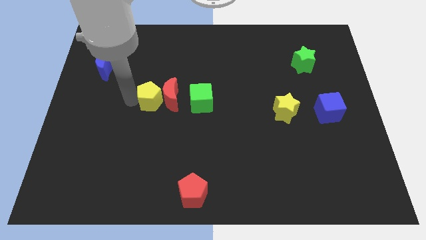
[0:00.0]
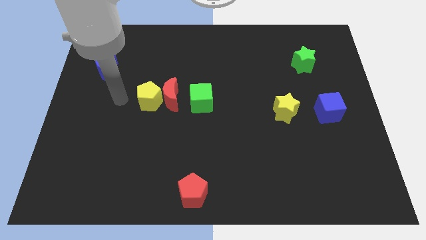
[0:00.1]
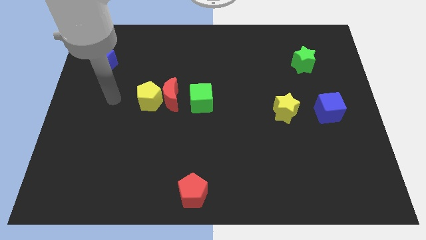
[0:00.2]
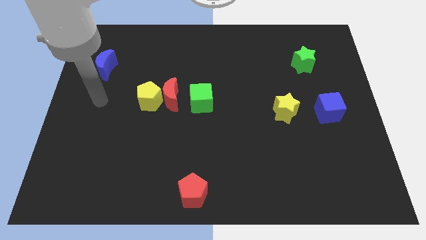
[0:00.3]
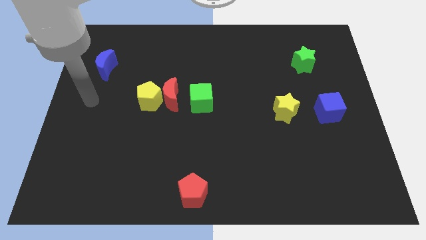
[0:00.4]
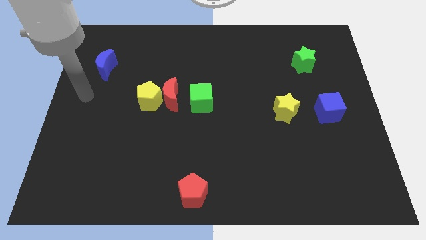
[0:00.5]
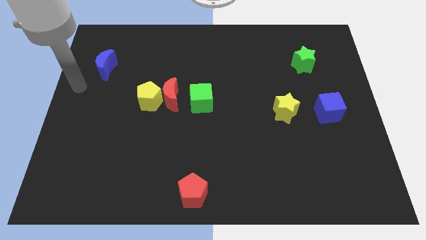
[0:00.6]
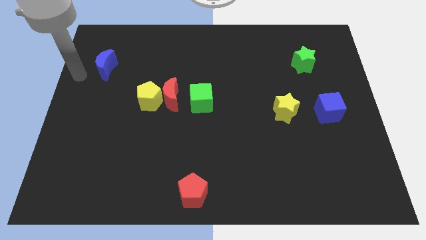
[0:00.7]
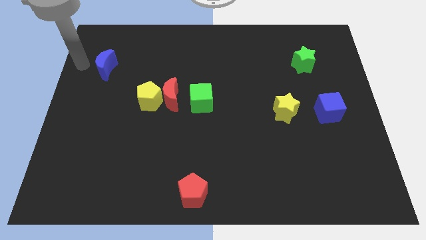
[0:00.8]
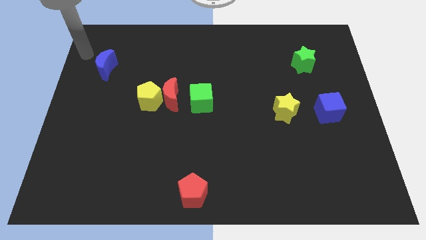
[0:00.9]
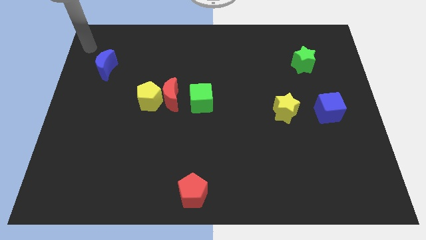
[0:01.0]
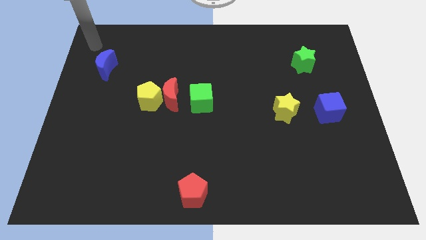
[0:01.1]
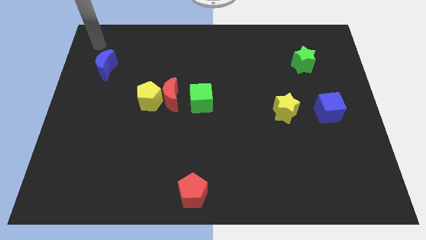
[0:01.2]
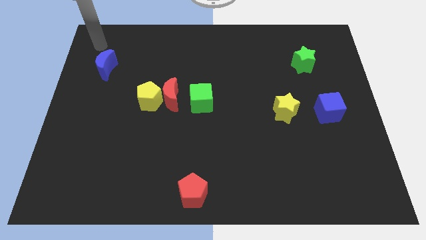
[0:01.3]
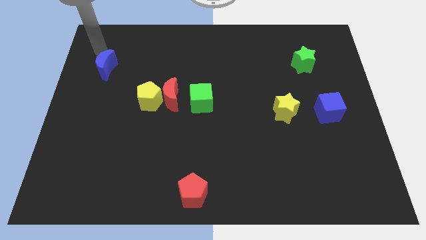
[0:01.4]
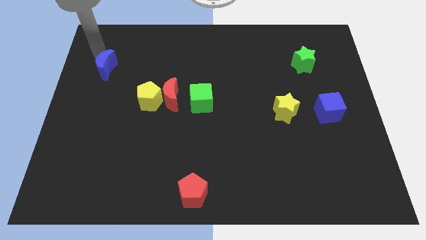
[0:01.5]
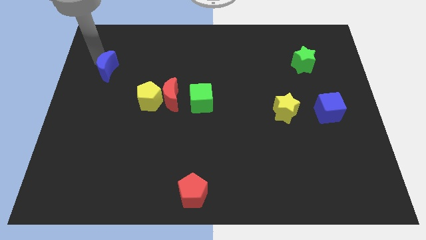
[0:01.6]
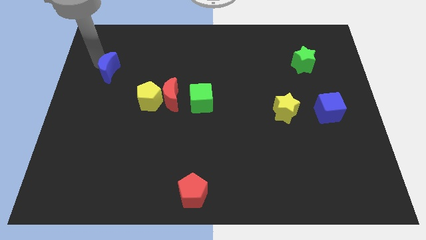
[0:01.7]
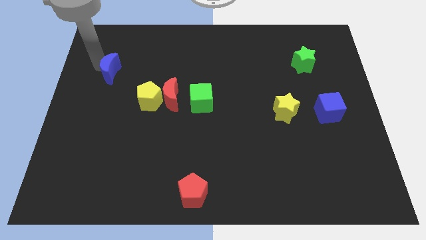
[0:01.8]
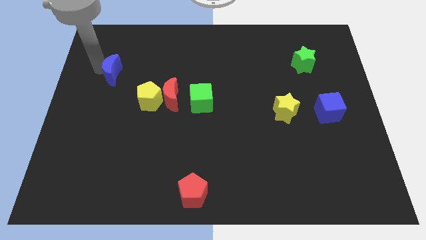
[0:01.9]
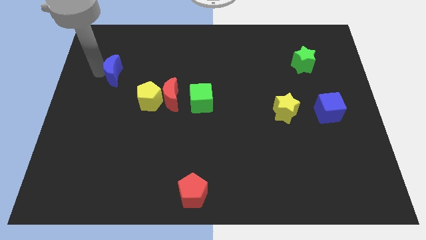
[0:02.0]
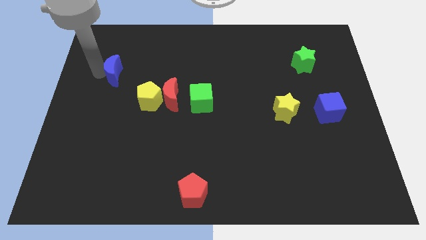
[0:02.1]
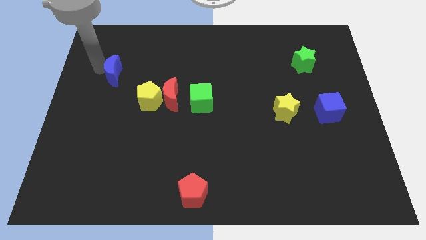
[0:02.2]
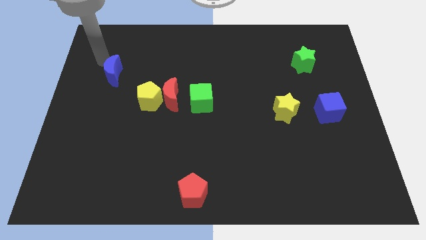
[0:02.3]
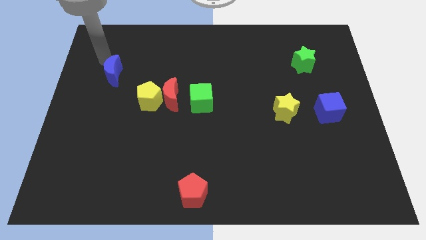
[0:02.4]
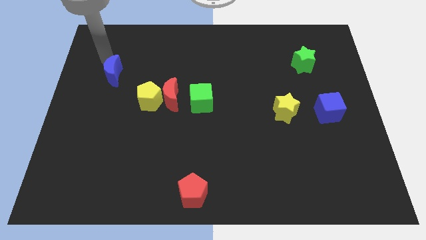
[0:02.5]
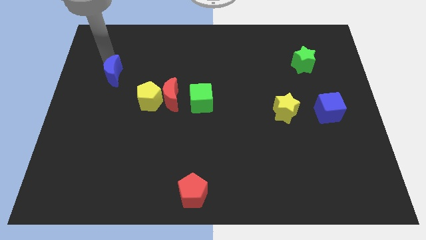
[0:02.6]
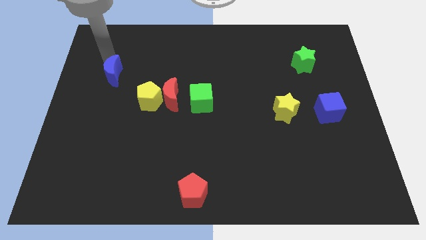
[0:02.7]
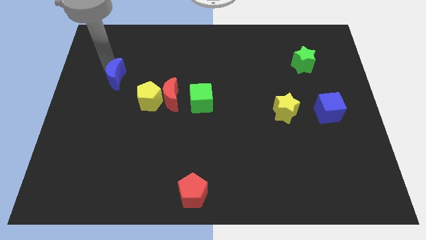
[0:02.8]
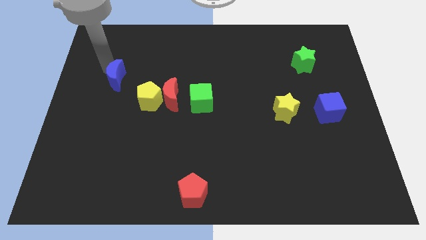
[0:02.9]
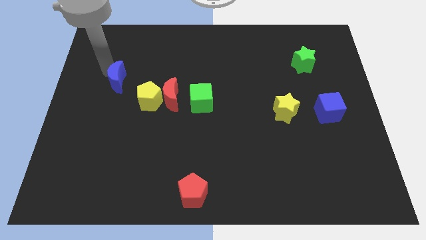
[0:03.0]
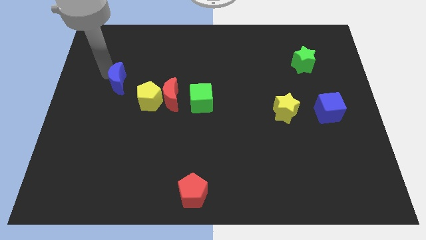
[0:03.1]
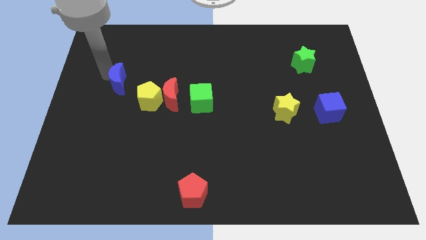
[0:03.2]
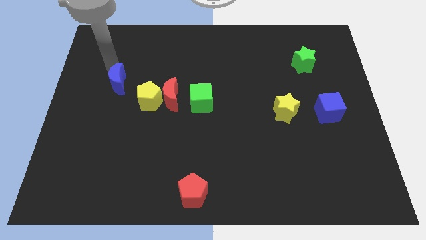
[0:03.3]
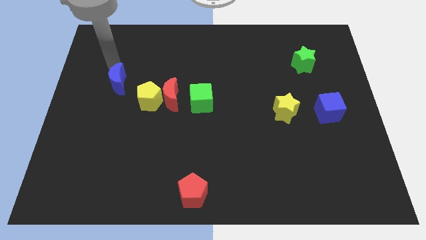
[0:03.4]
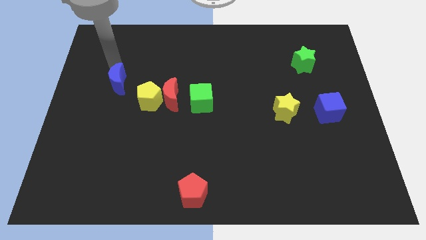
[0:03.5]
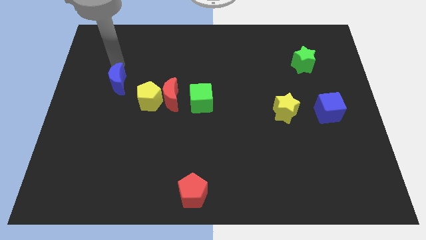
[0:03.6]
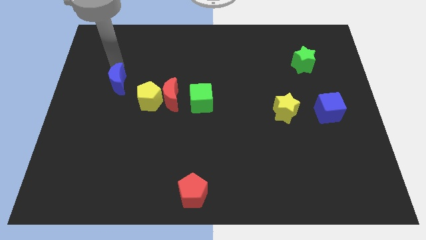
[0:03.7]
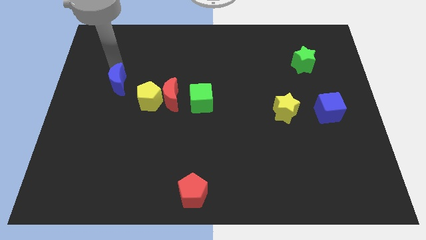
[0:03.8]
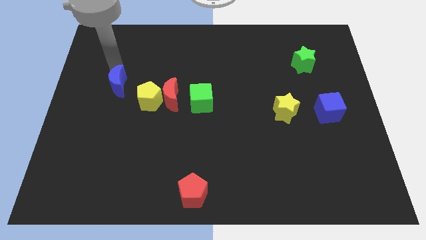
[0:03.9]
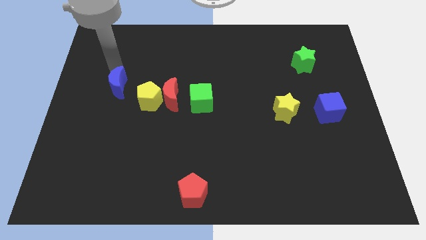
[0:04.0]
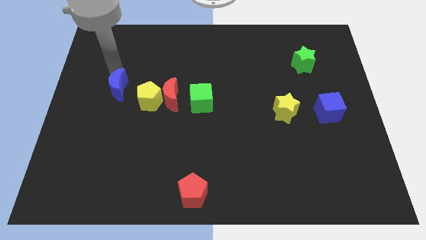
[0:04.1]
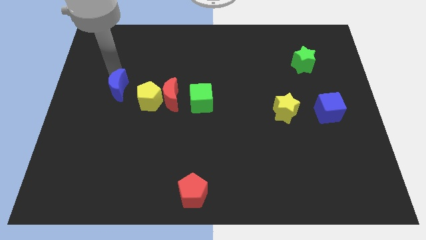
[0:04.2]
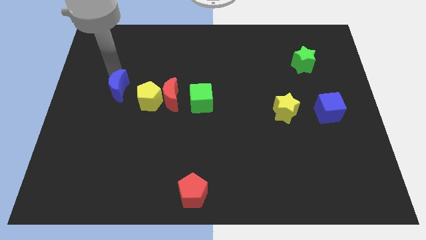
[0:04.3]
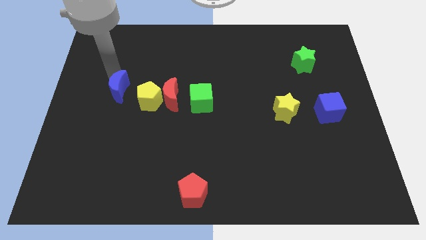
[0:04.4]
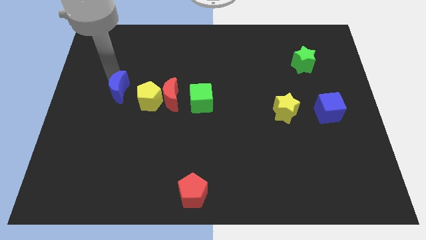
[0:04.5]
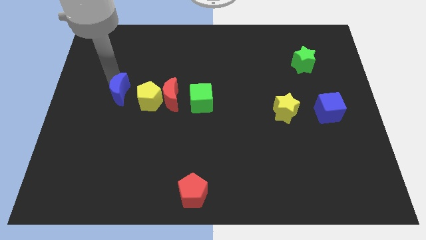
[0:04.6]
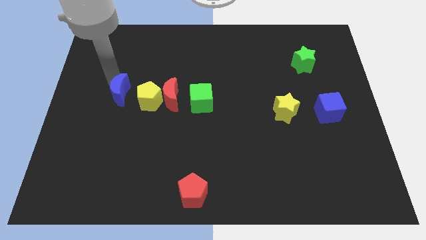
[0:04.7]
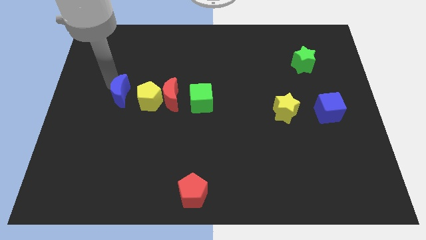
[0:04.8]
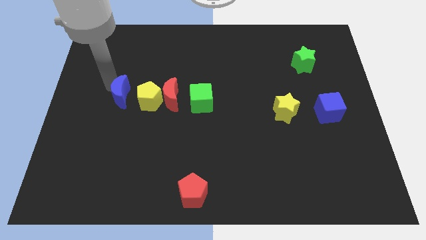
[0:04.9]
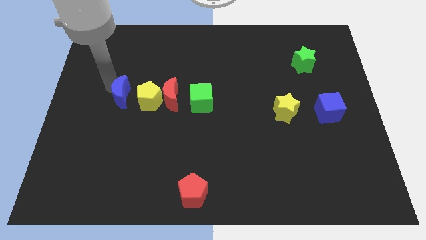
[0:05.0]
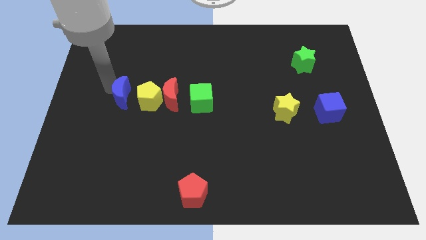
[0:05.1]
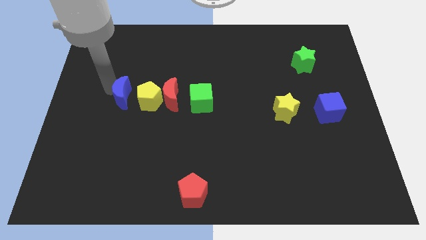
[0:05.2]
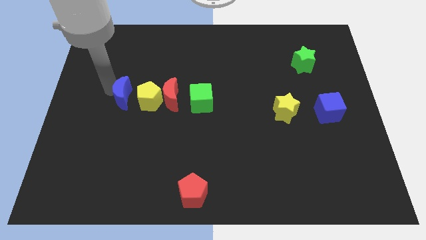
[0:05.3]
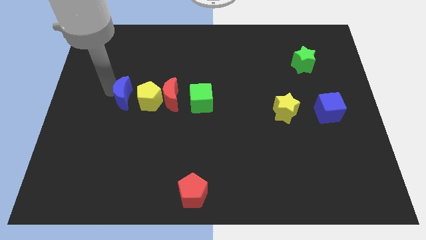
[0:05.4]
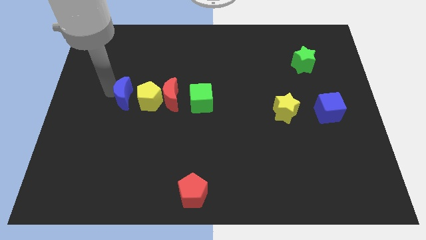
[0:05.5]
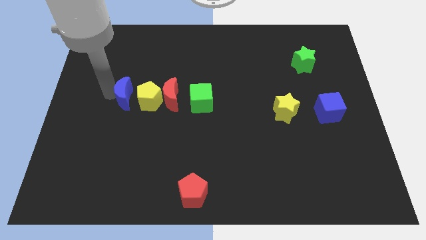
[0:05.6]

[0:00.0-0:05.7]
put the blue moon parallel to yellow pentagon

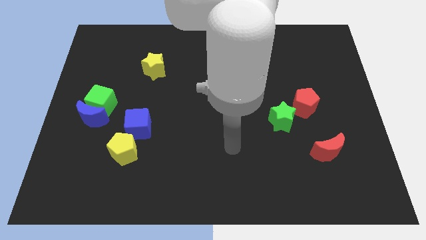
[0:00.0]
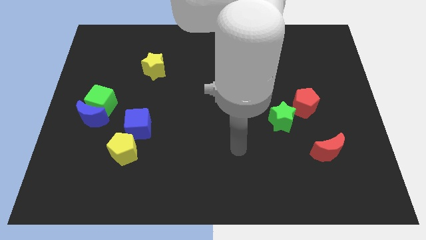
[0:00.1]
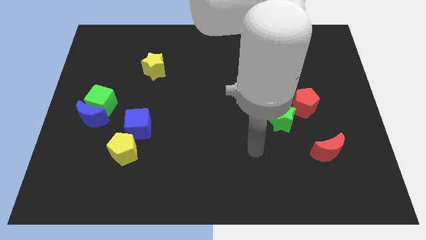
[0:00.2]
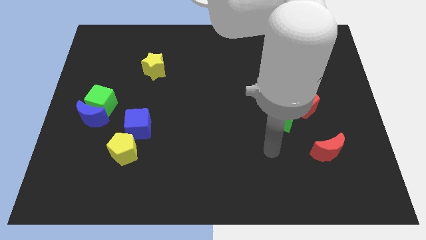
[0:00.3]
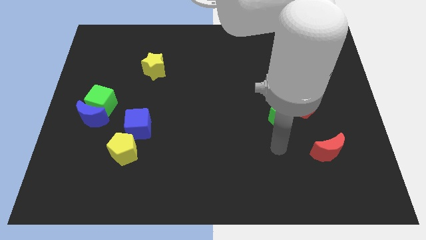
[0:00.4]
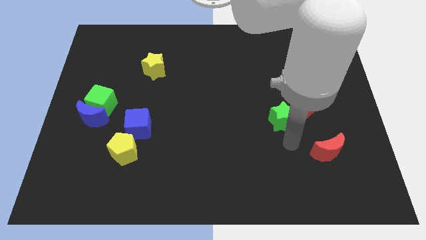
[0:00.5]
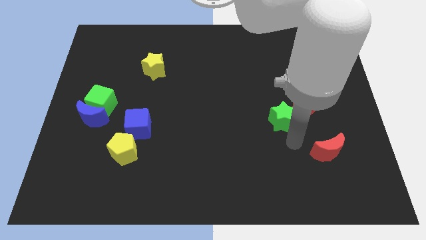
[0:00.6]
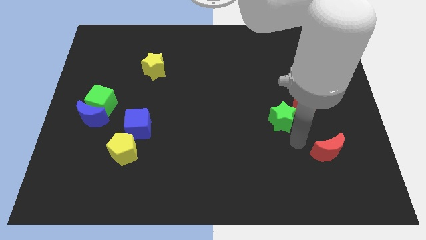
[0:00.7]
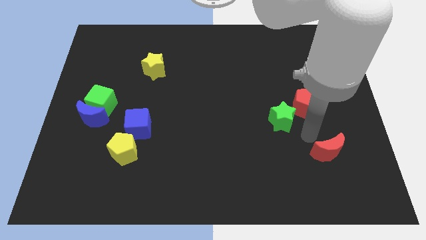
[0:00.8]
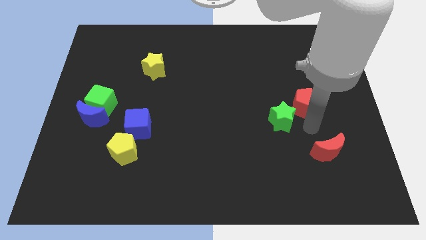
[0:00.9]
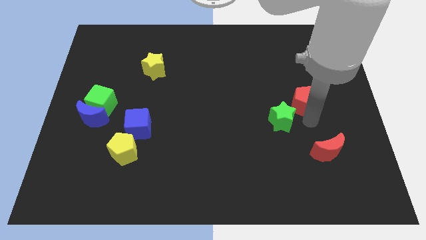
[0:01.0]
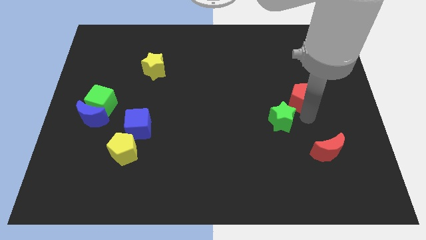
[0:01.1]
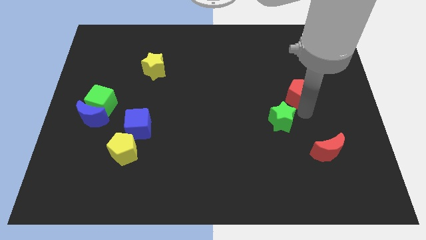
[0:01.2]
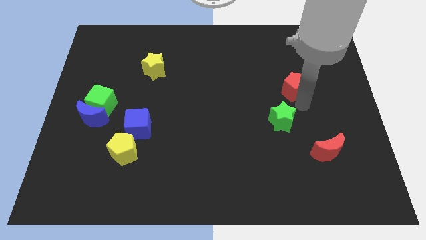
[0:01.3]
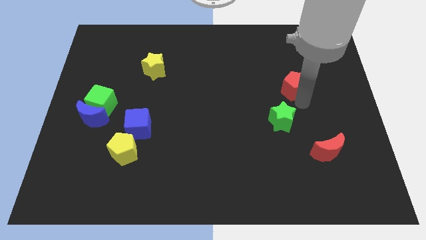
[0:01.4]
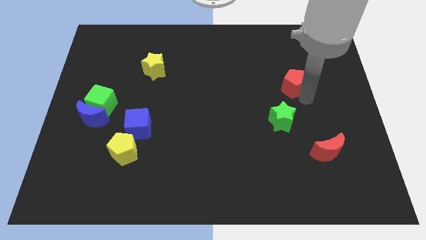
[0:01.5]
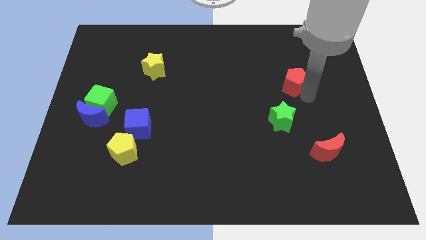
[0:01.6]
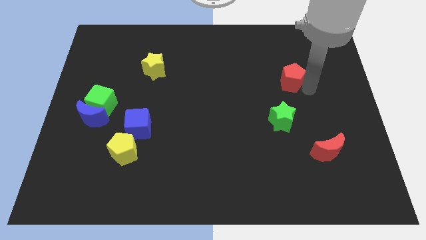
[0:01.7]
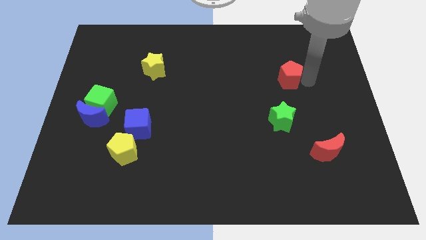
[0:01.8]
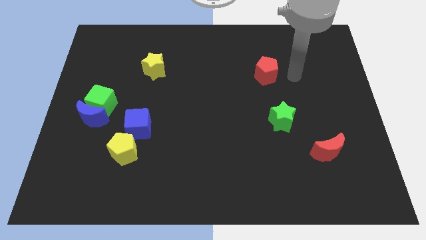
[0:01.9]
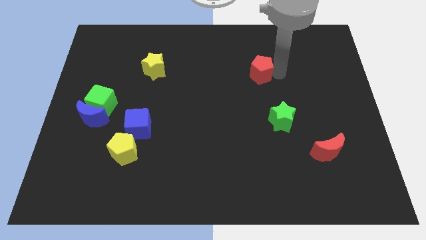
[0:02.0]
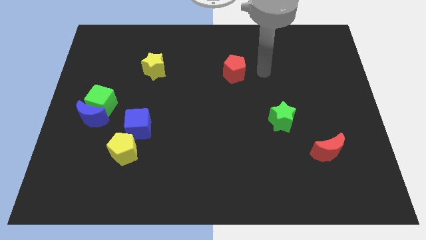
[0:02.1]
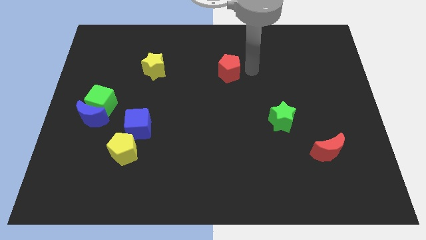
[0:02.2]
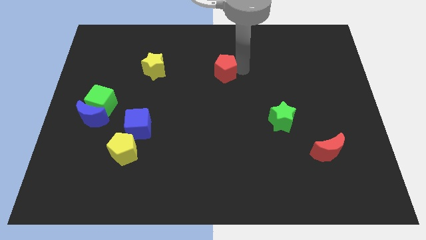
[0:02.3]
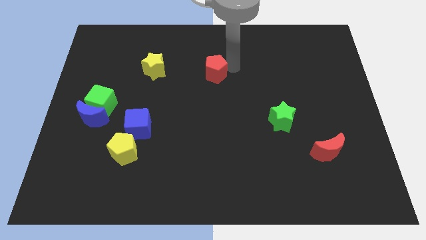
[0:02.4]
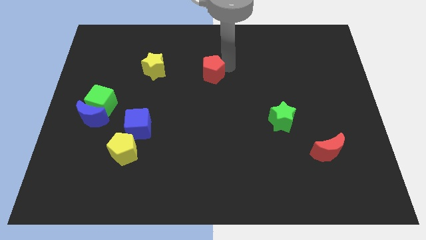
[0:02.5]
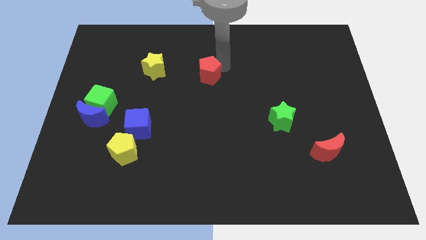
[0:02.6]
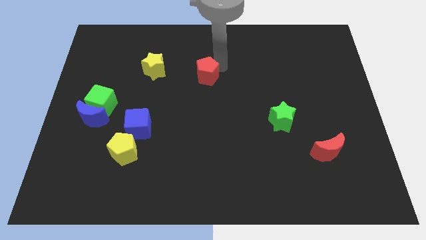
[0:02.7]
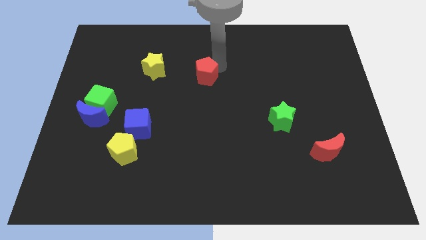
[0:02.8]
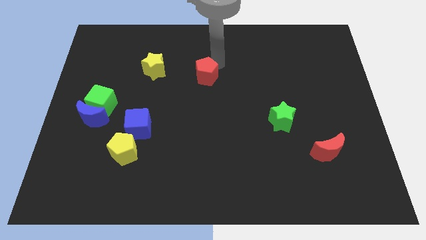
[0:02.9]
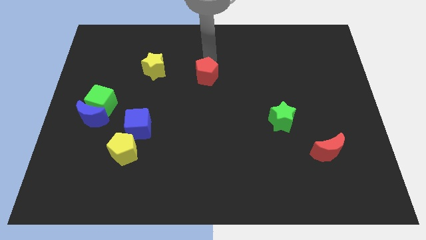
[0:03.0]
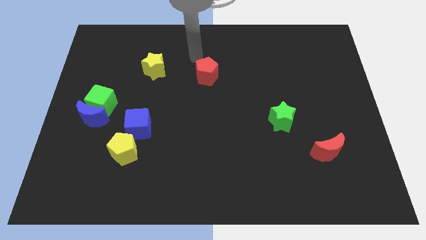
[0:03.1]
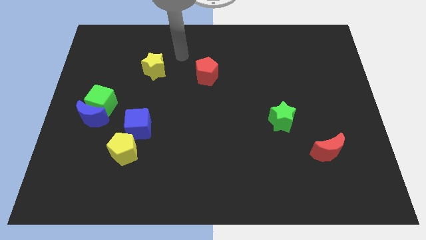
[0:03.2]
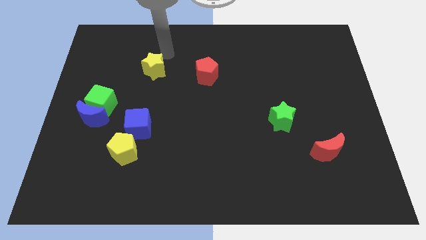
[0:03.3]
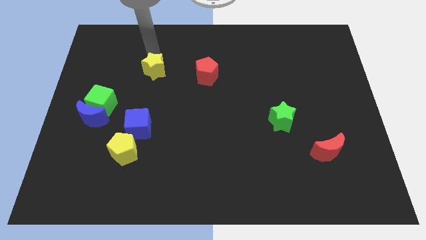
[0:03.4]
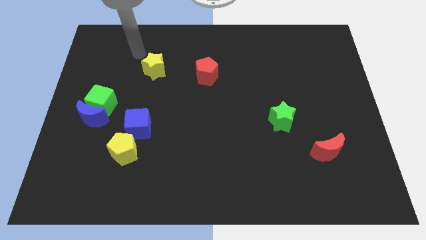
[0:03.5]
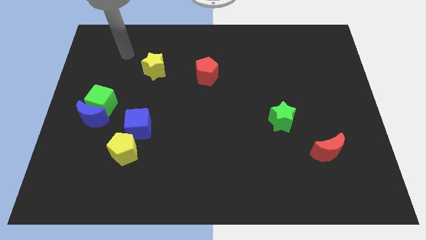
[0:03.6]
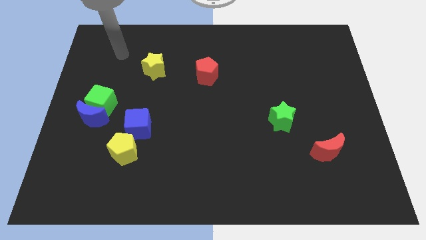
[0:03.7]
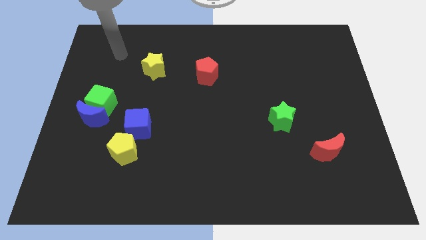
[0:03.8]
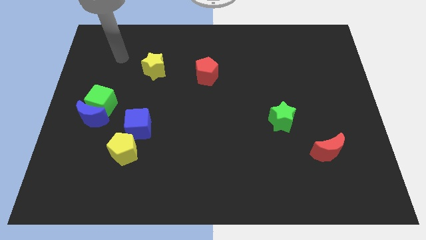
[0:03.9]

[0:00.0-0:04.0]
push the red pentagon to the left
